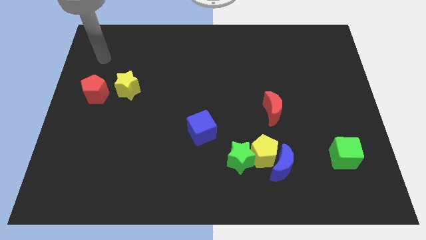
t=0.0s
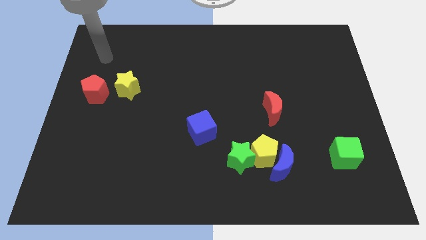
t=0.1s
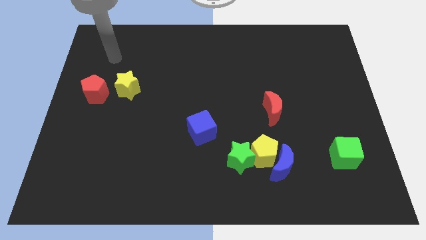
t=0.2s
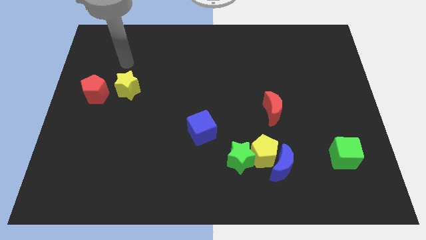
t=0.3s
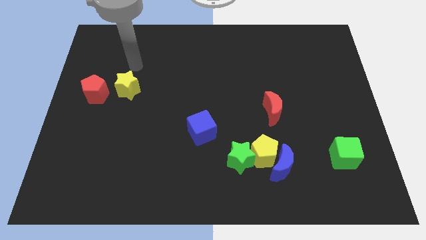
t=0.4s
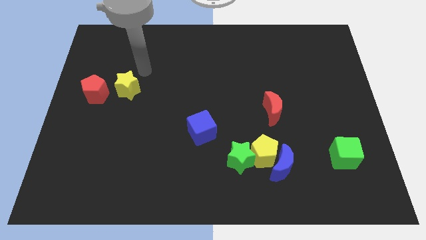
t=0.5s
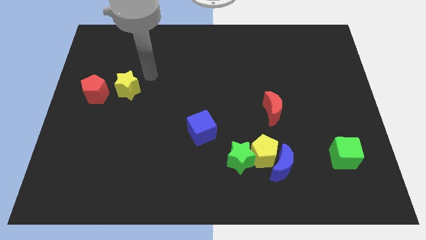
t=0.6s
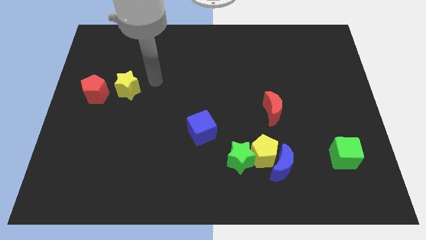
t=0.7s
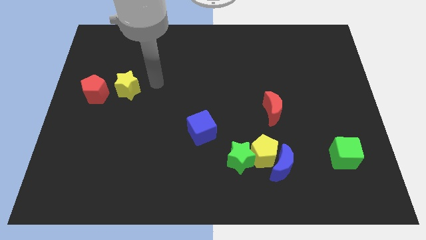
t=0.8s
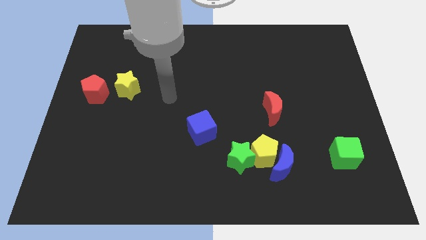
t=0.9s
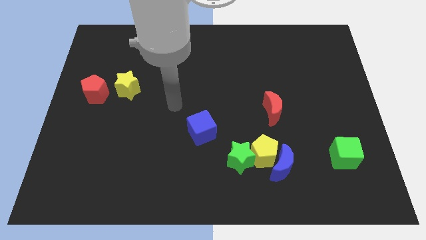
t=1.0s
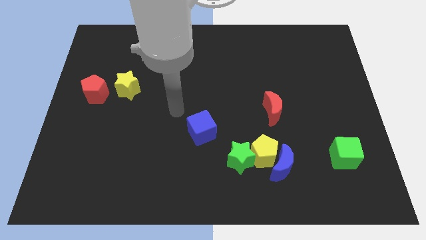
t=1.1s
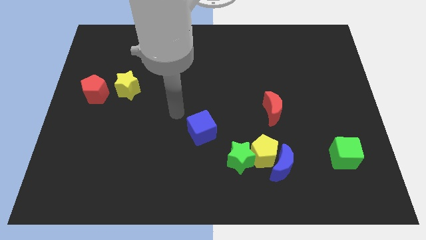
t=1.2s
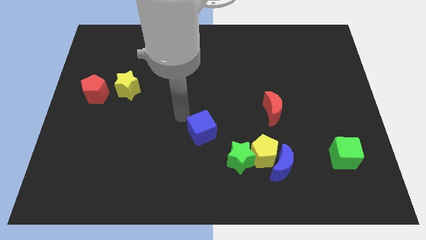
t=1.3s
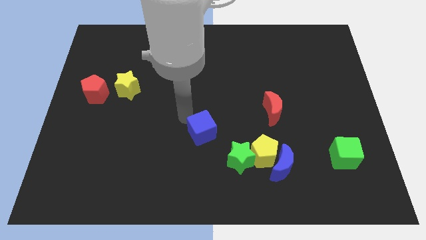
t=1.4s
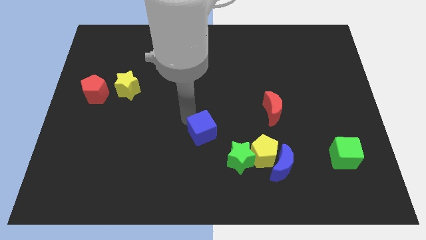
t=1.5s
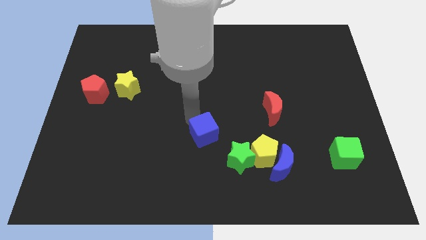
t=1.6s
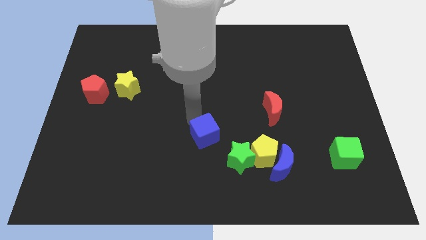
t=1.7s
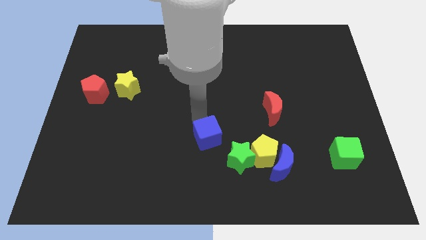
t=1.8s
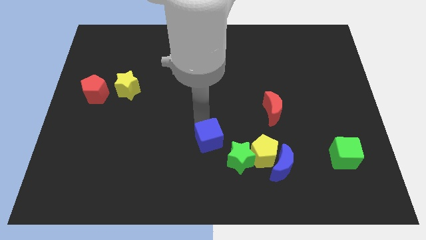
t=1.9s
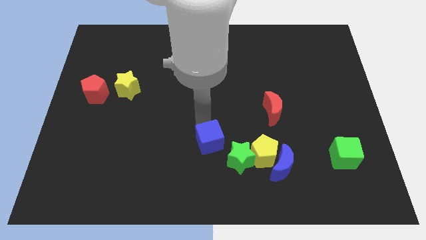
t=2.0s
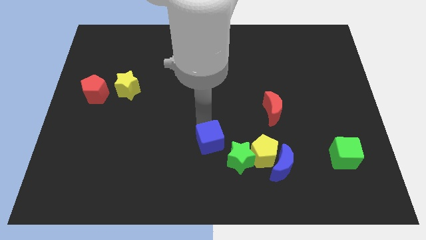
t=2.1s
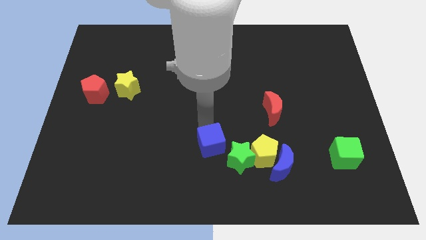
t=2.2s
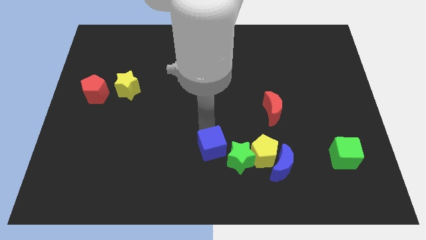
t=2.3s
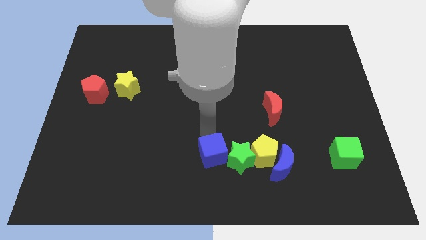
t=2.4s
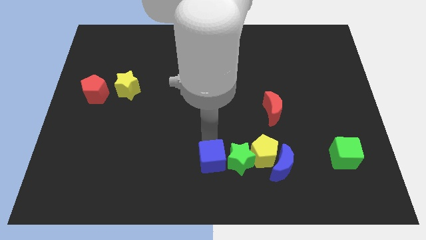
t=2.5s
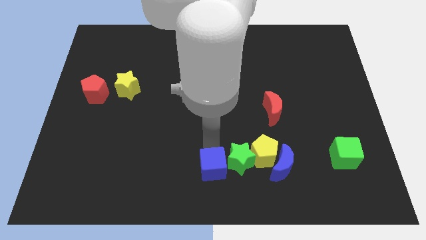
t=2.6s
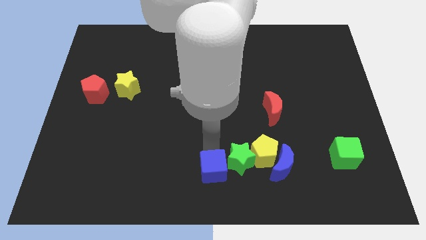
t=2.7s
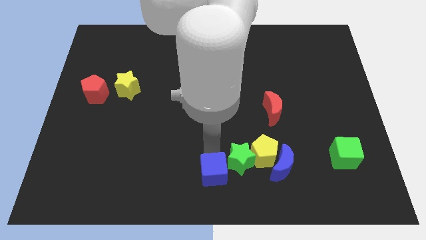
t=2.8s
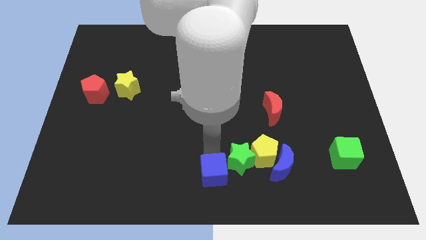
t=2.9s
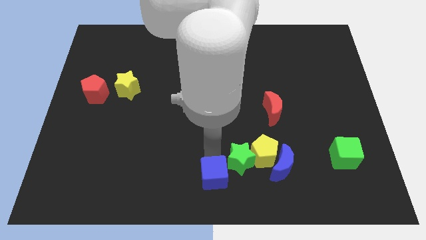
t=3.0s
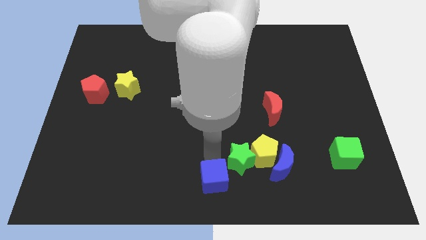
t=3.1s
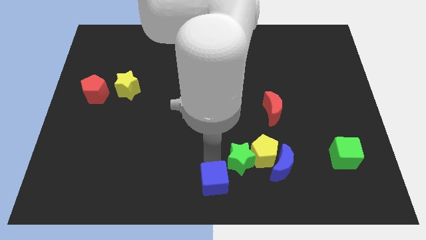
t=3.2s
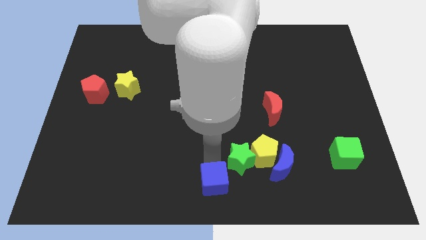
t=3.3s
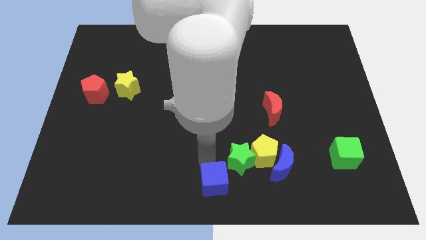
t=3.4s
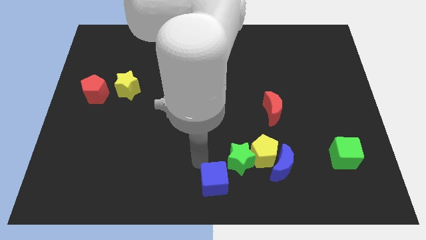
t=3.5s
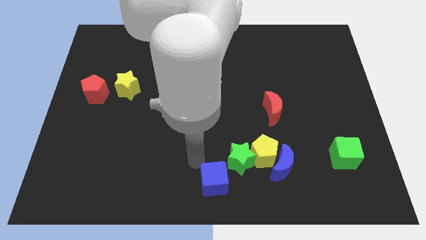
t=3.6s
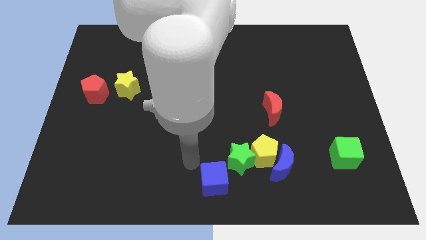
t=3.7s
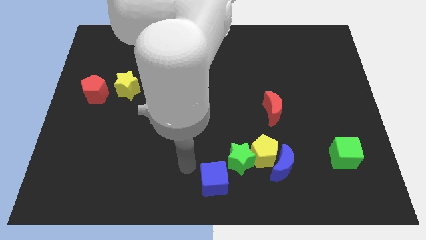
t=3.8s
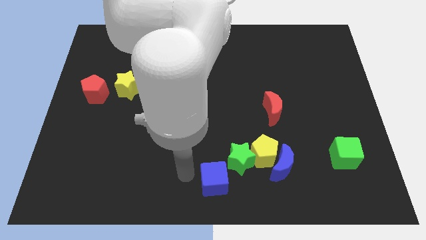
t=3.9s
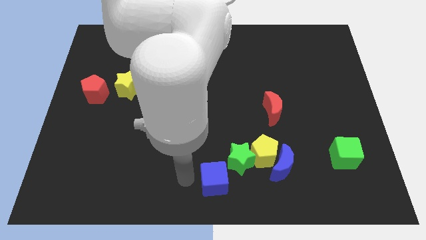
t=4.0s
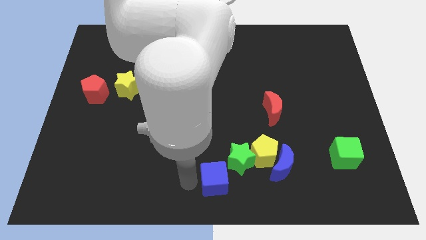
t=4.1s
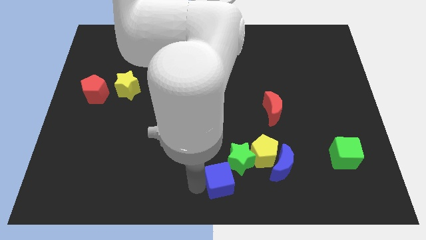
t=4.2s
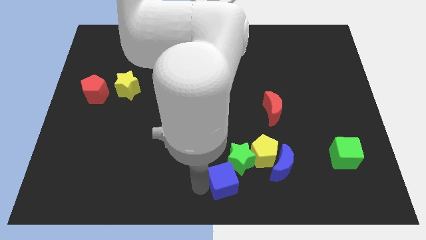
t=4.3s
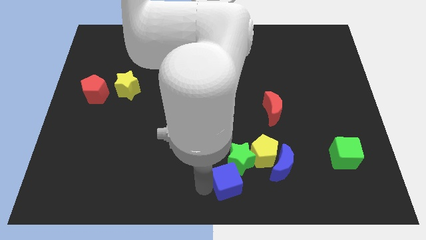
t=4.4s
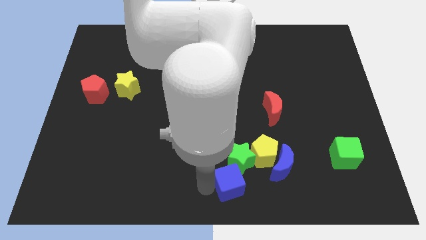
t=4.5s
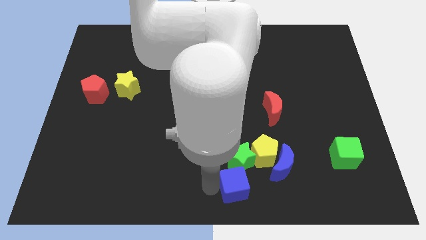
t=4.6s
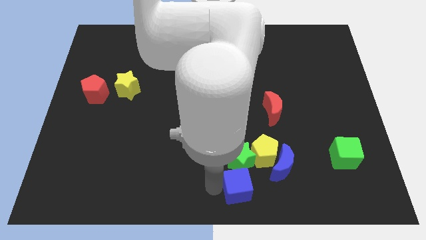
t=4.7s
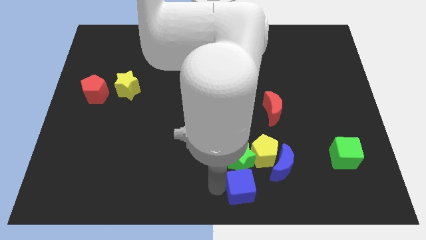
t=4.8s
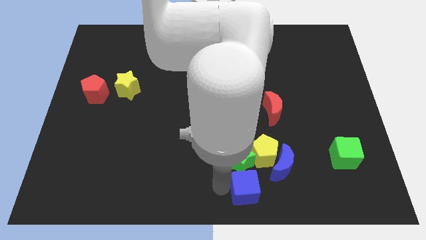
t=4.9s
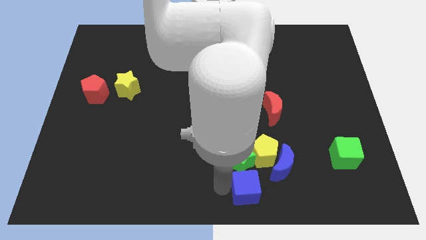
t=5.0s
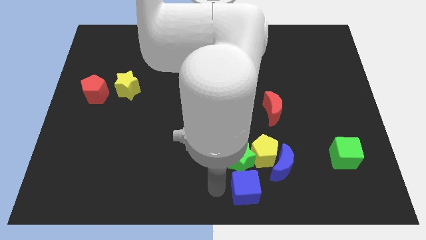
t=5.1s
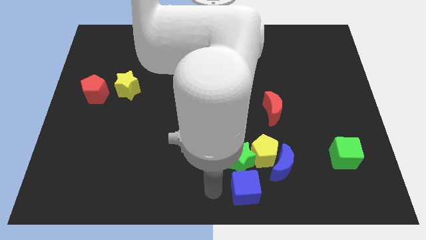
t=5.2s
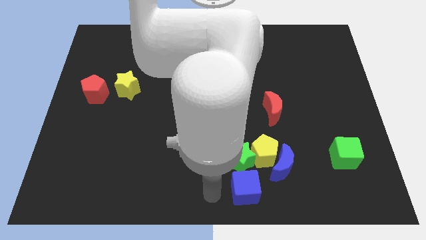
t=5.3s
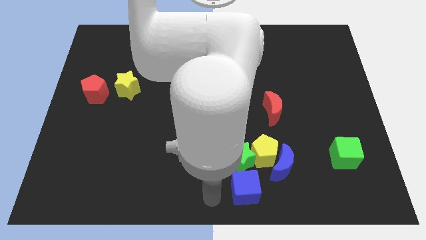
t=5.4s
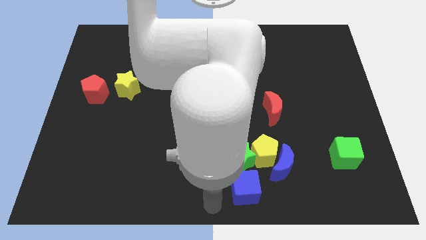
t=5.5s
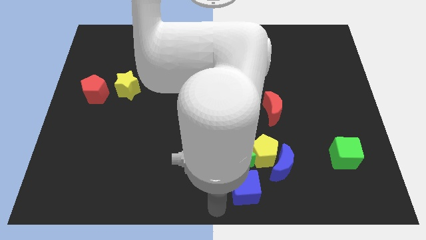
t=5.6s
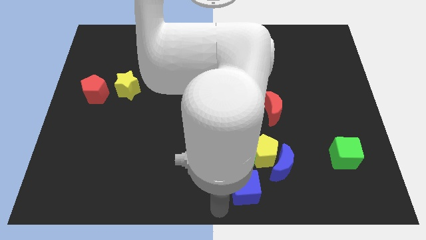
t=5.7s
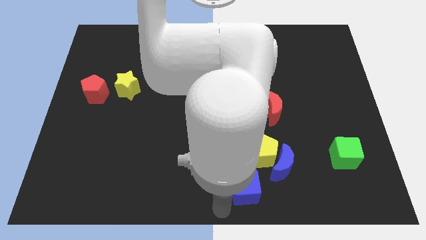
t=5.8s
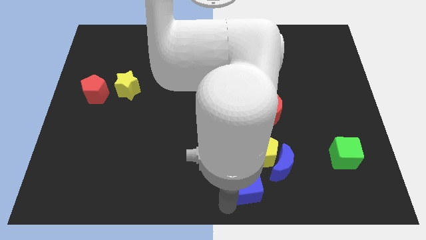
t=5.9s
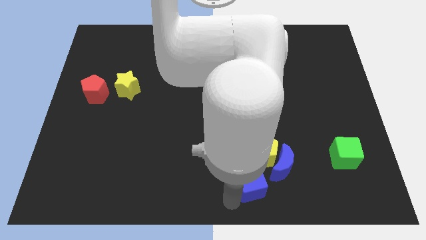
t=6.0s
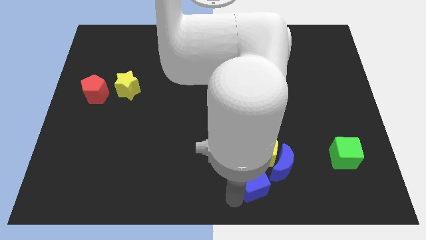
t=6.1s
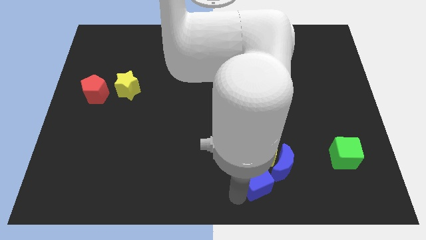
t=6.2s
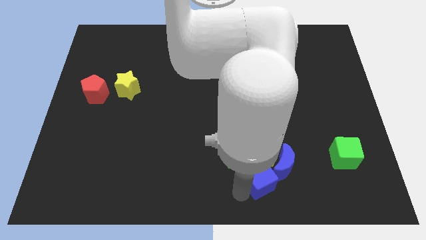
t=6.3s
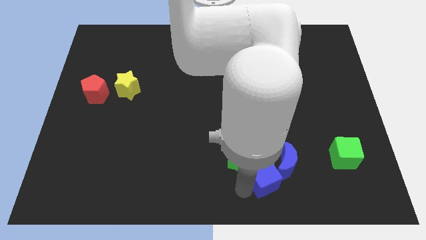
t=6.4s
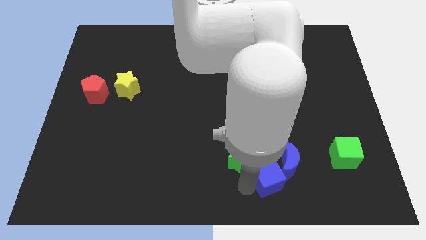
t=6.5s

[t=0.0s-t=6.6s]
move the blue cube towards the blue moon

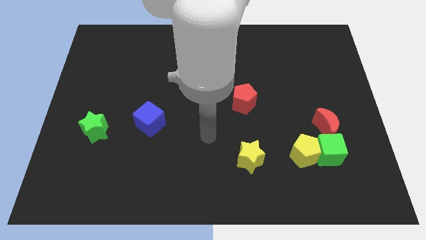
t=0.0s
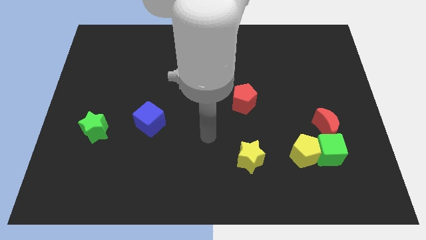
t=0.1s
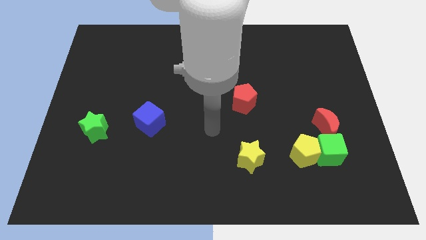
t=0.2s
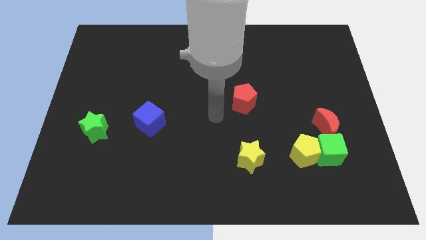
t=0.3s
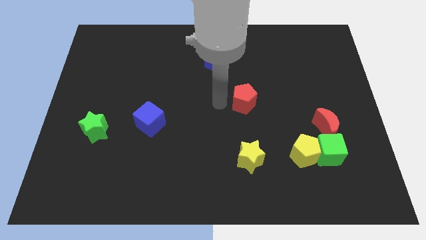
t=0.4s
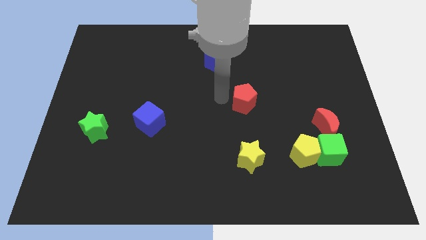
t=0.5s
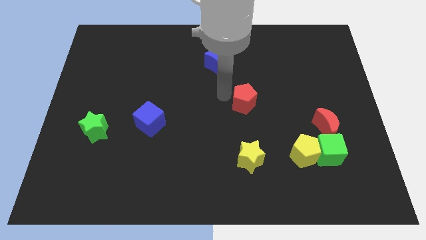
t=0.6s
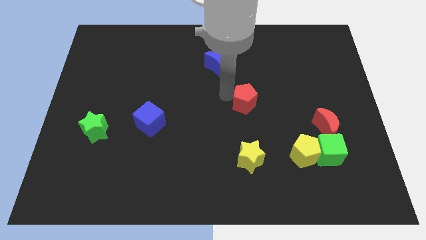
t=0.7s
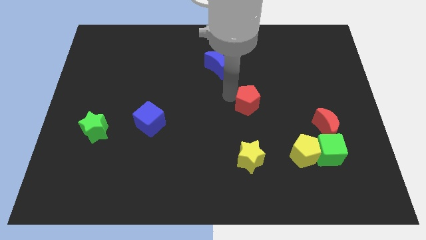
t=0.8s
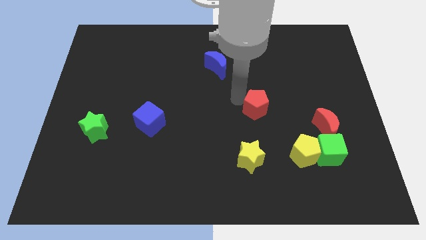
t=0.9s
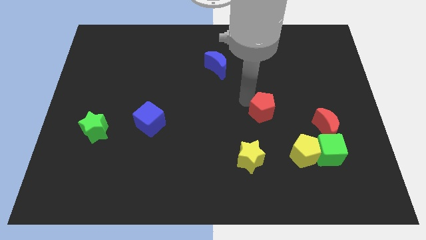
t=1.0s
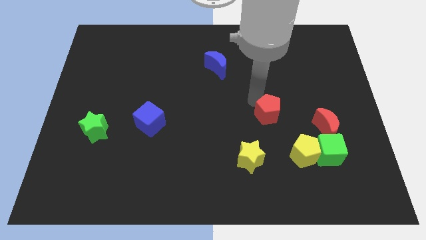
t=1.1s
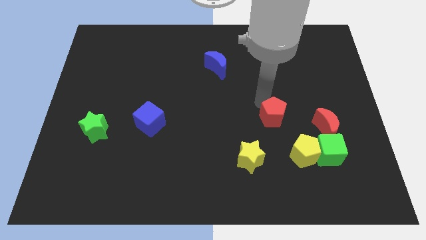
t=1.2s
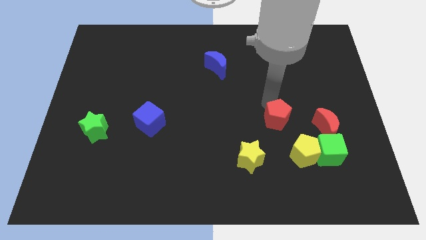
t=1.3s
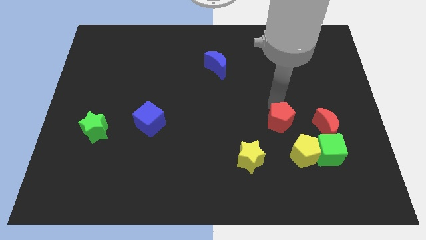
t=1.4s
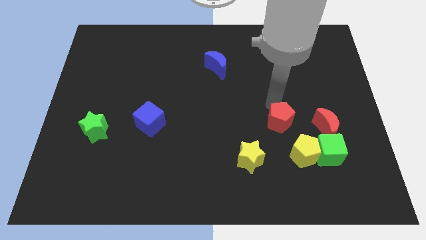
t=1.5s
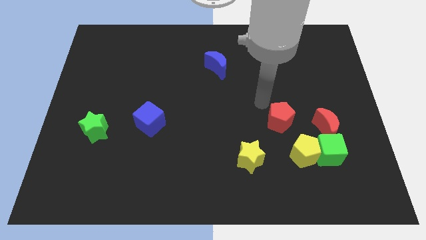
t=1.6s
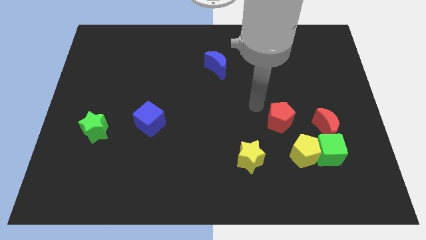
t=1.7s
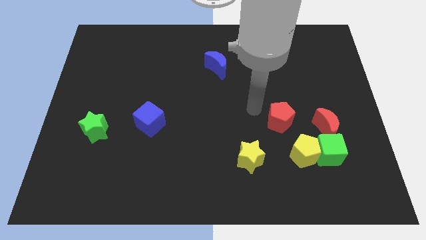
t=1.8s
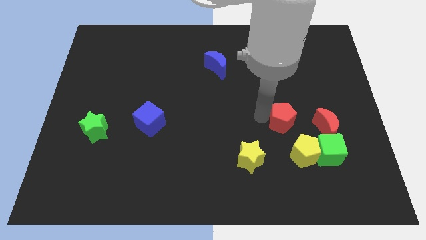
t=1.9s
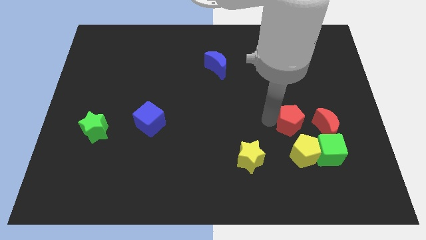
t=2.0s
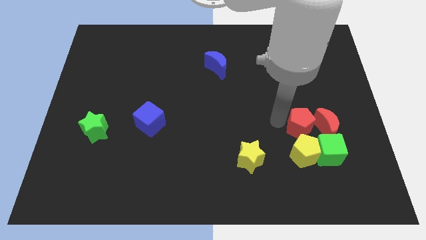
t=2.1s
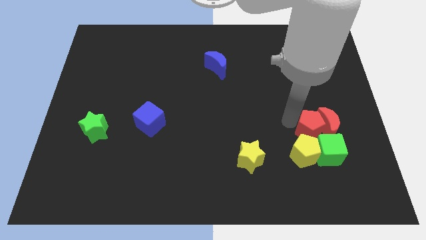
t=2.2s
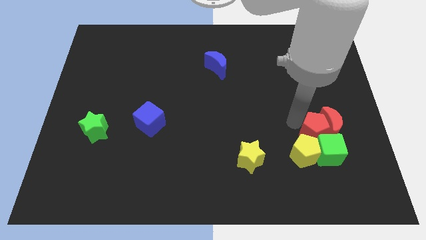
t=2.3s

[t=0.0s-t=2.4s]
put the red pentagon next to the red moon
